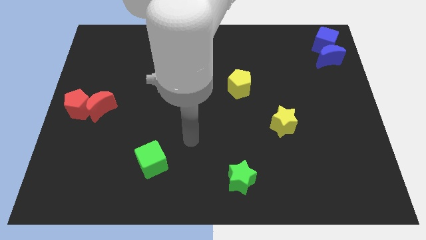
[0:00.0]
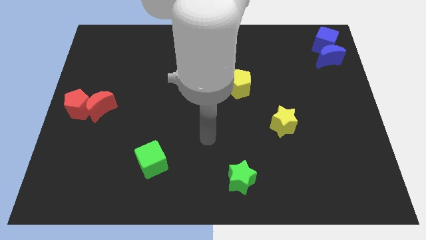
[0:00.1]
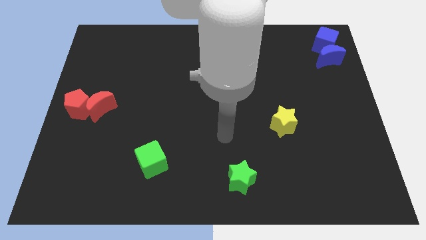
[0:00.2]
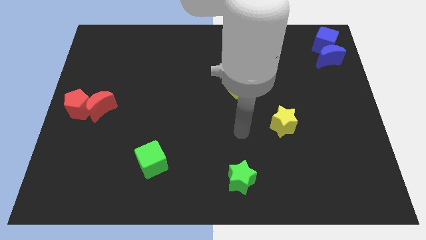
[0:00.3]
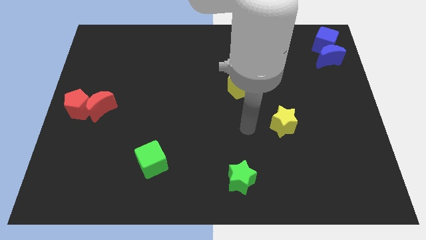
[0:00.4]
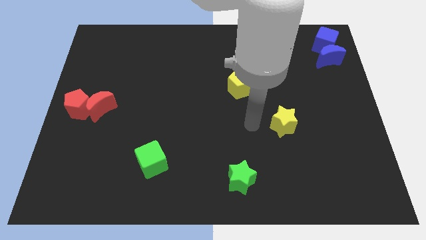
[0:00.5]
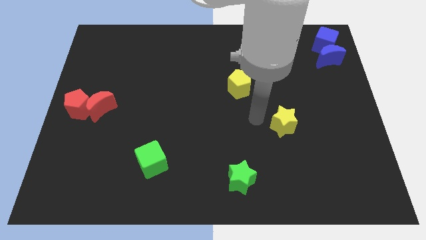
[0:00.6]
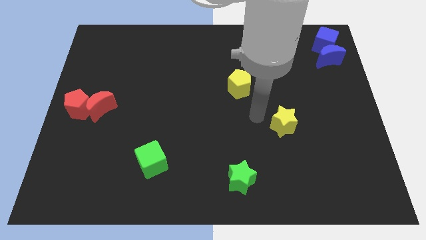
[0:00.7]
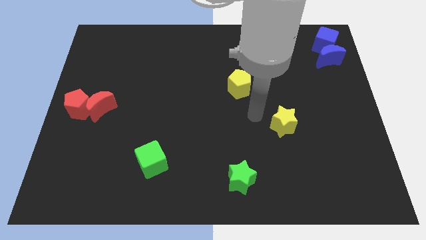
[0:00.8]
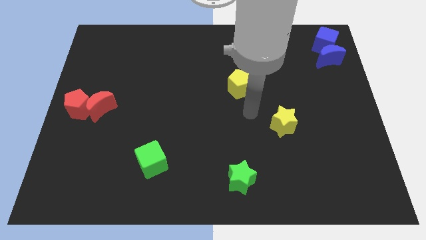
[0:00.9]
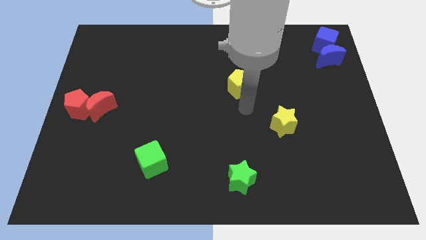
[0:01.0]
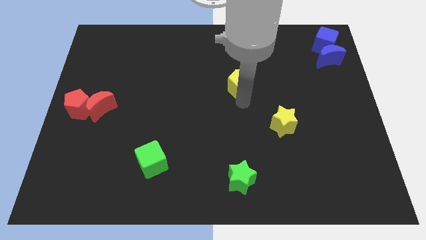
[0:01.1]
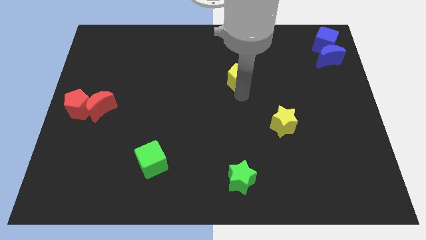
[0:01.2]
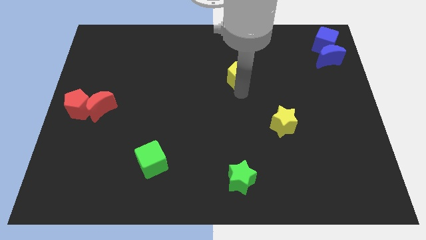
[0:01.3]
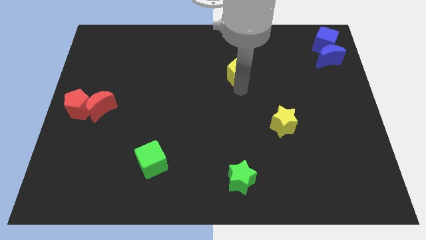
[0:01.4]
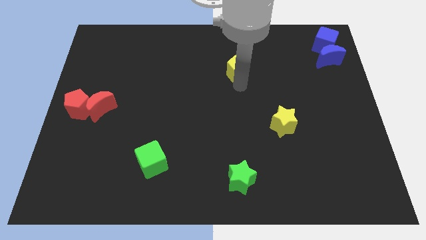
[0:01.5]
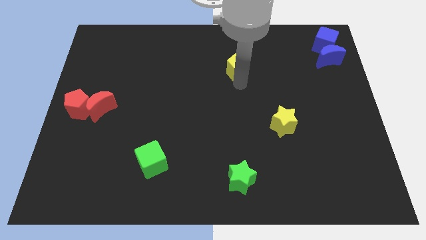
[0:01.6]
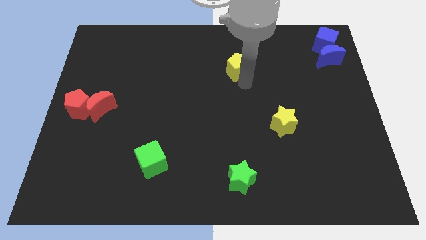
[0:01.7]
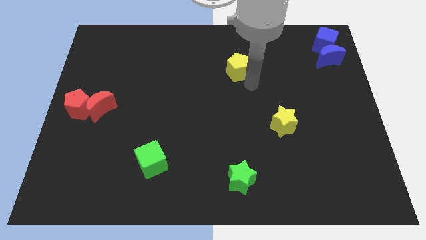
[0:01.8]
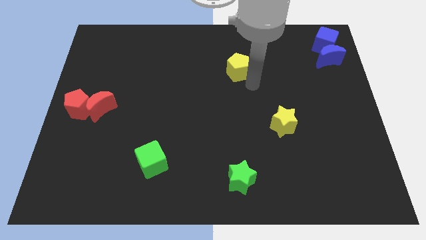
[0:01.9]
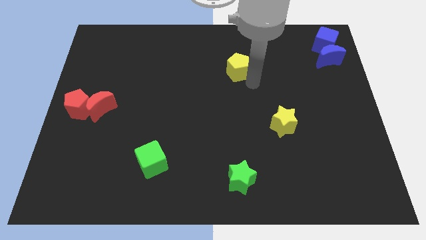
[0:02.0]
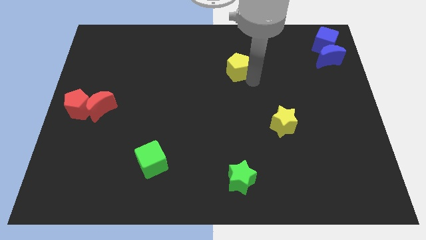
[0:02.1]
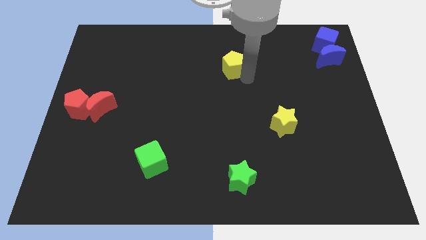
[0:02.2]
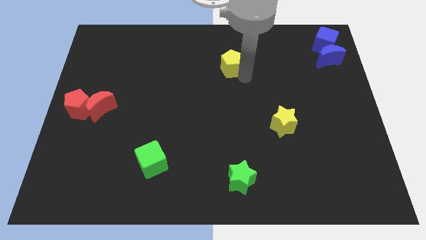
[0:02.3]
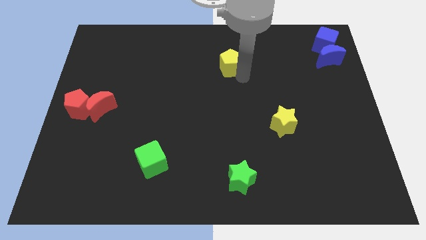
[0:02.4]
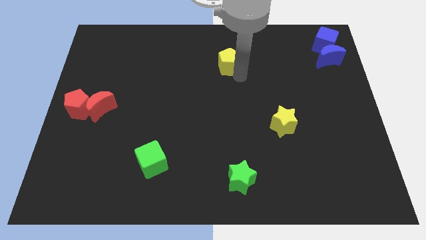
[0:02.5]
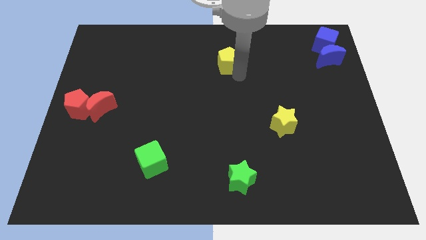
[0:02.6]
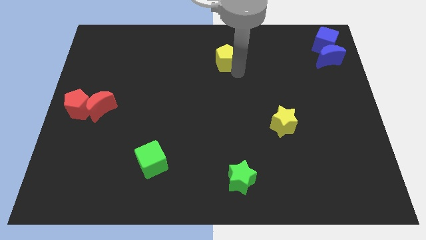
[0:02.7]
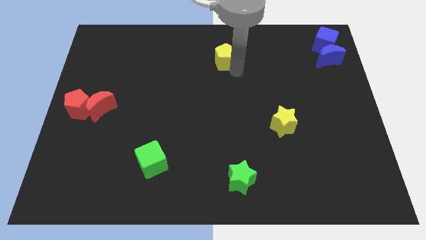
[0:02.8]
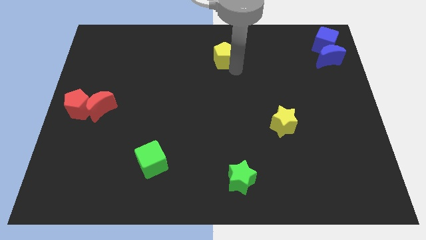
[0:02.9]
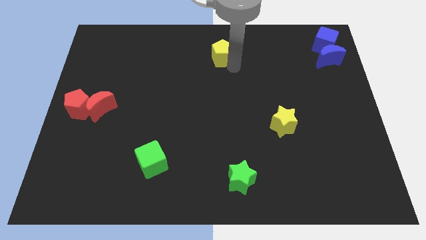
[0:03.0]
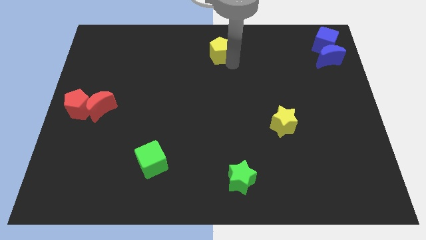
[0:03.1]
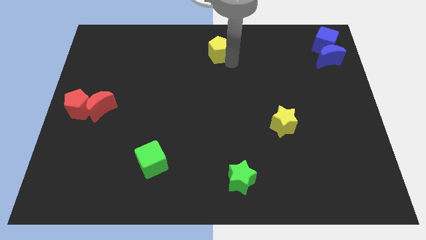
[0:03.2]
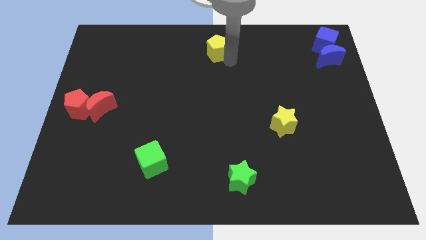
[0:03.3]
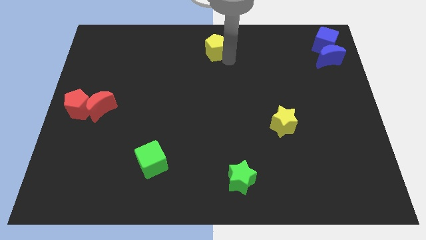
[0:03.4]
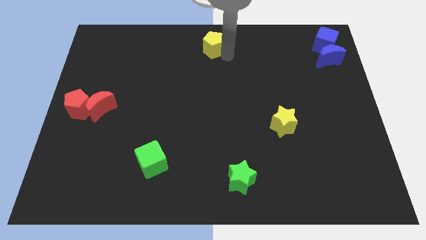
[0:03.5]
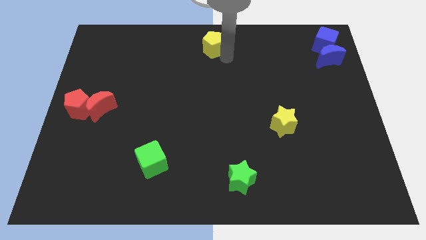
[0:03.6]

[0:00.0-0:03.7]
place yellow pantagon on the top center of the board

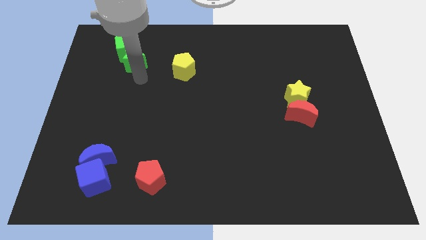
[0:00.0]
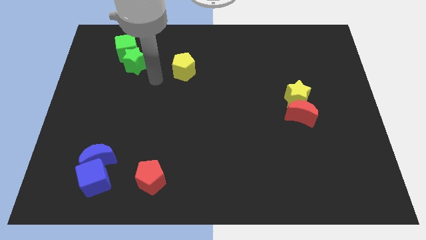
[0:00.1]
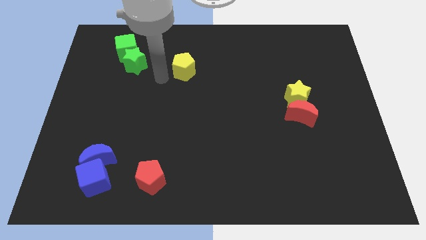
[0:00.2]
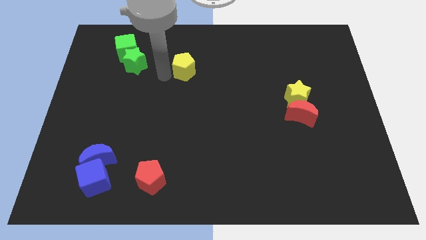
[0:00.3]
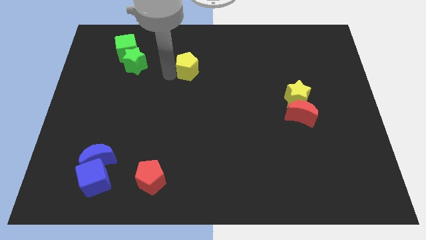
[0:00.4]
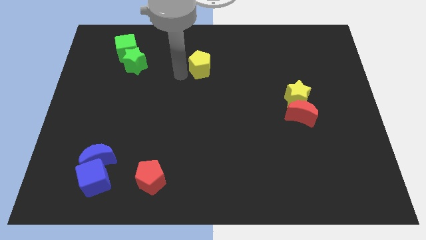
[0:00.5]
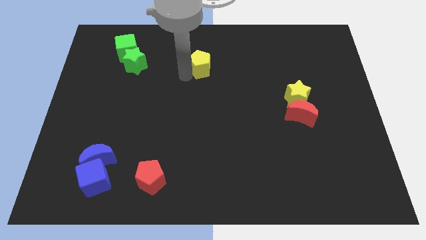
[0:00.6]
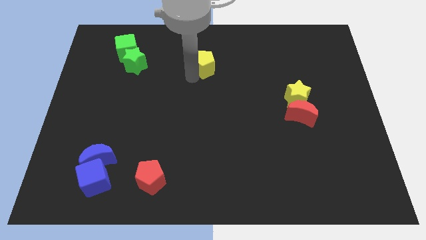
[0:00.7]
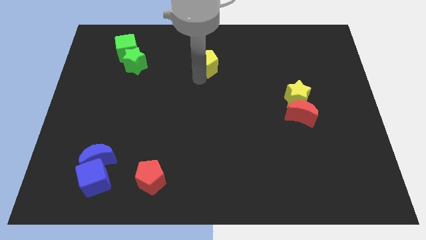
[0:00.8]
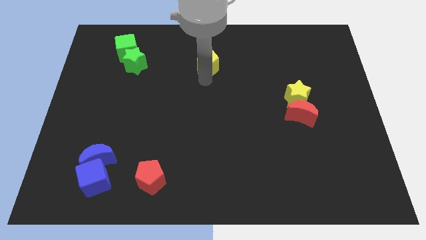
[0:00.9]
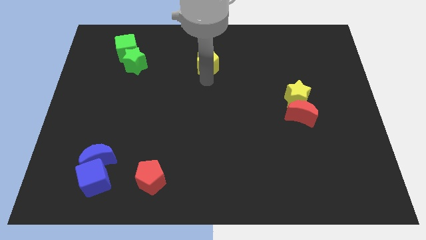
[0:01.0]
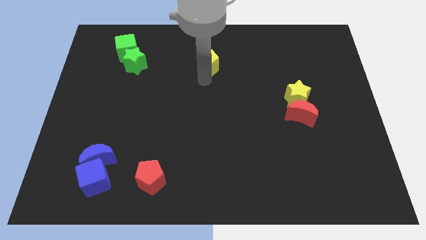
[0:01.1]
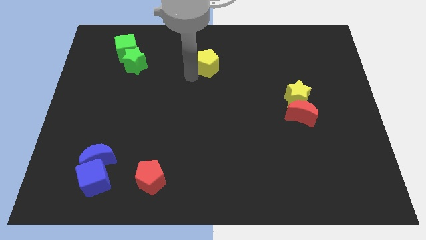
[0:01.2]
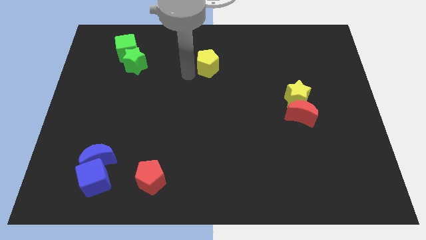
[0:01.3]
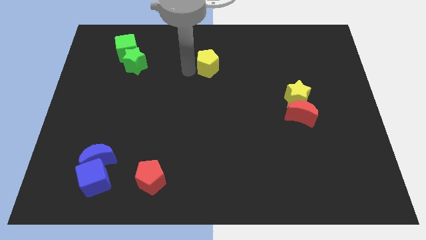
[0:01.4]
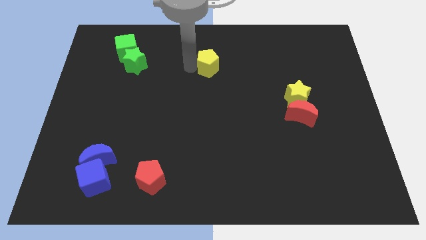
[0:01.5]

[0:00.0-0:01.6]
slide the yellow pentagon slightly to the right

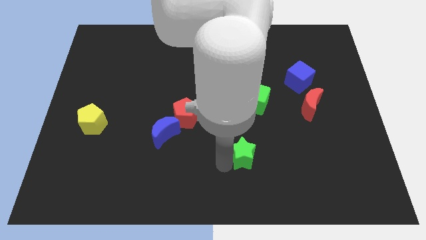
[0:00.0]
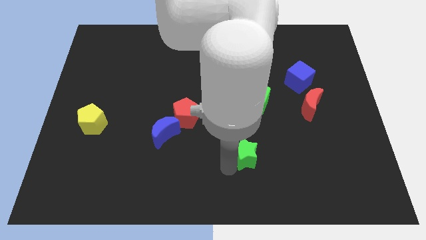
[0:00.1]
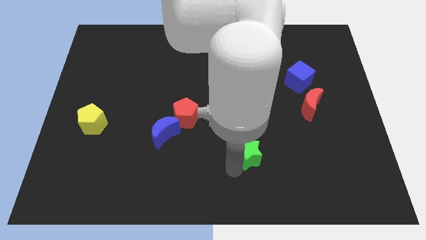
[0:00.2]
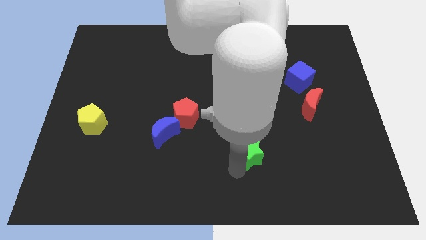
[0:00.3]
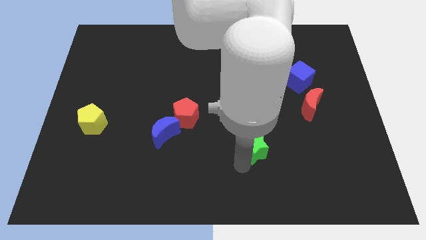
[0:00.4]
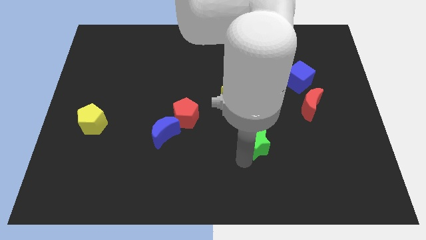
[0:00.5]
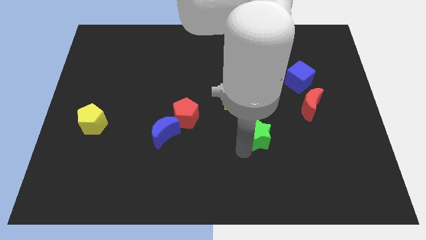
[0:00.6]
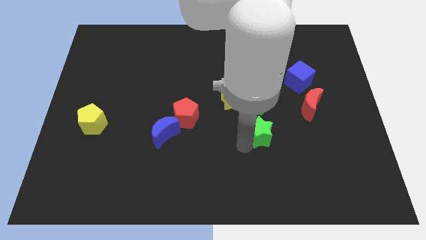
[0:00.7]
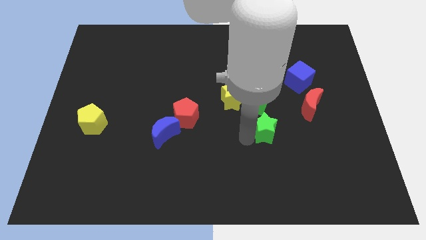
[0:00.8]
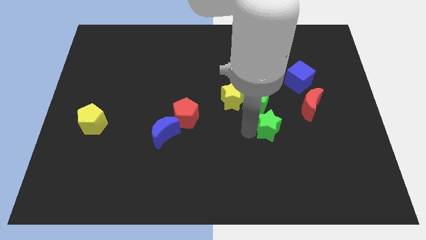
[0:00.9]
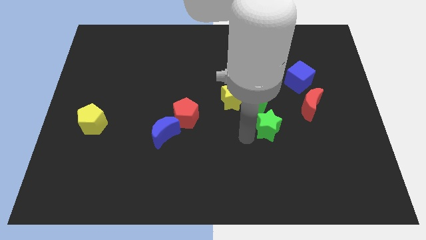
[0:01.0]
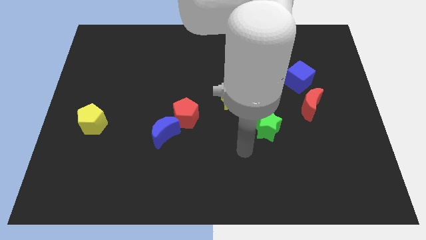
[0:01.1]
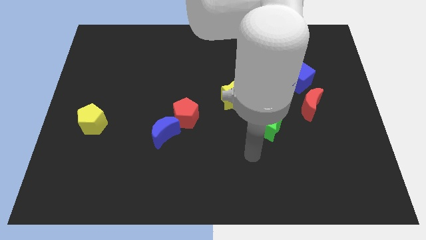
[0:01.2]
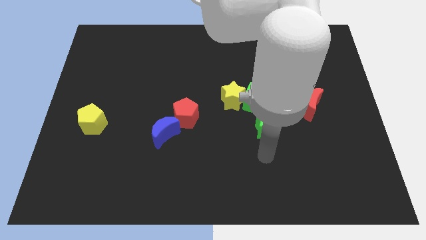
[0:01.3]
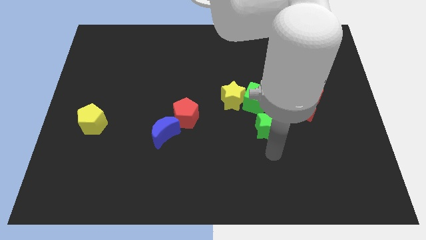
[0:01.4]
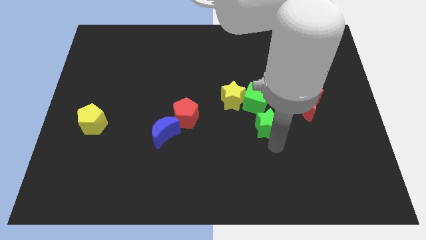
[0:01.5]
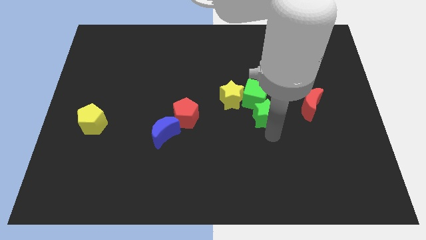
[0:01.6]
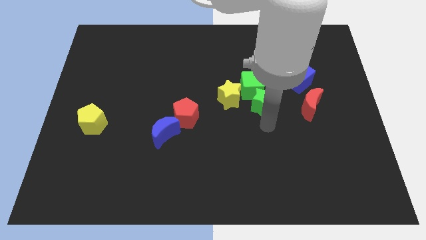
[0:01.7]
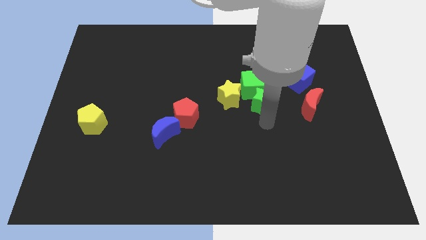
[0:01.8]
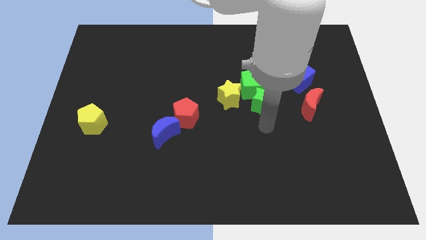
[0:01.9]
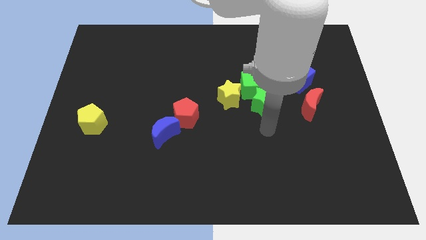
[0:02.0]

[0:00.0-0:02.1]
add green star into green cube

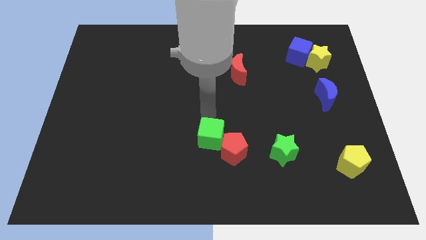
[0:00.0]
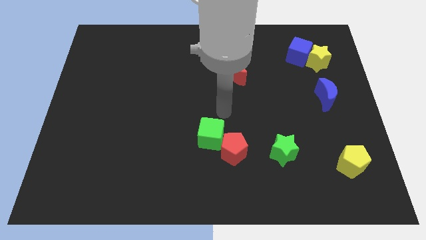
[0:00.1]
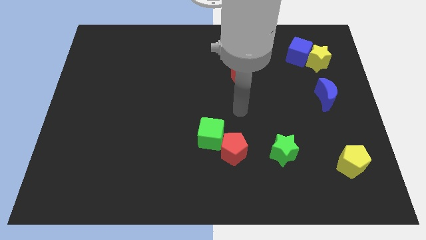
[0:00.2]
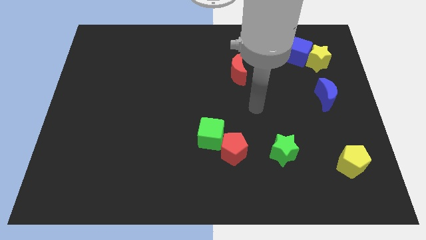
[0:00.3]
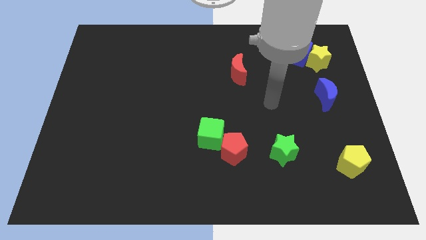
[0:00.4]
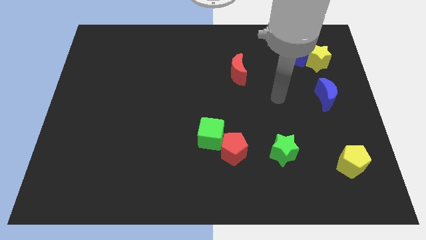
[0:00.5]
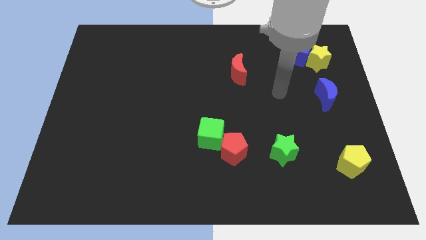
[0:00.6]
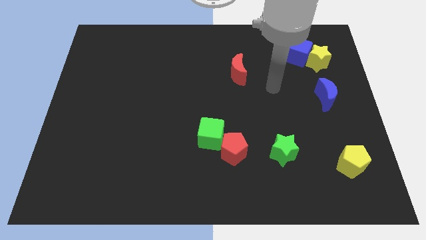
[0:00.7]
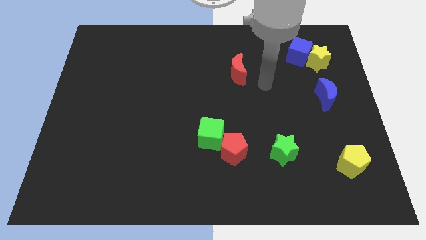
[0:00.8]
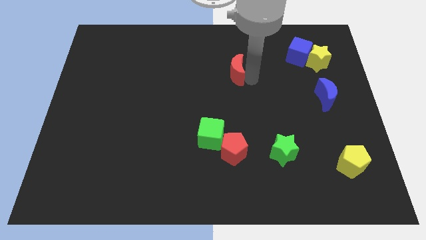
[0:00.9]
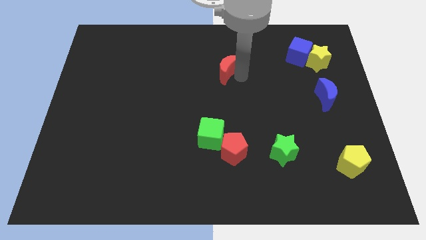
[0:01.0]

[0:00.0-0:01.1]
move the arm into the red crescent

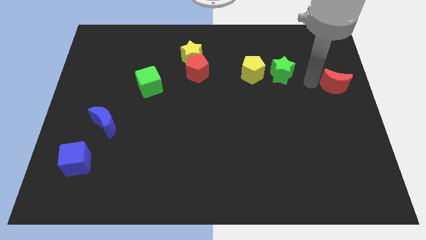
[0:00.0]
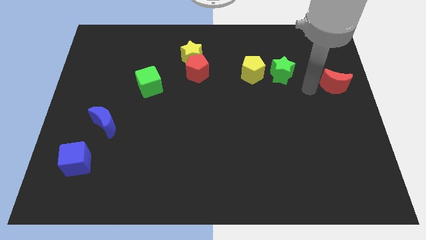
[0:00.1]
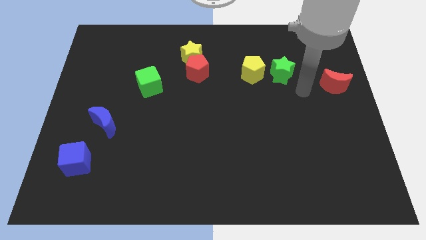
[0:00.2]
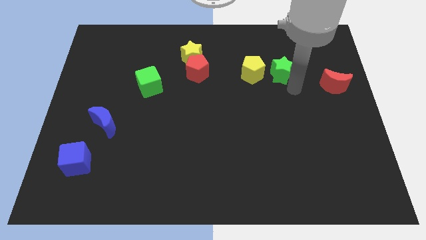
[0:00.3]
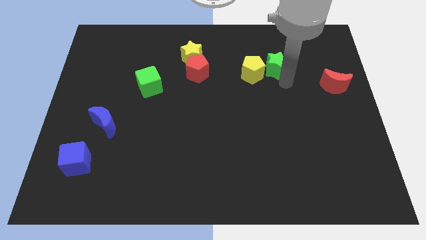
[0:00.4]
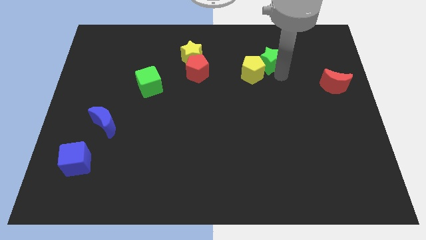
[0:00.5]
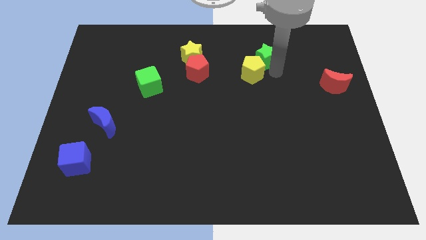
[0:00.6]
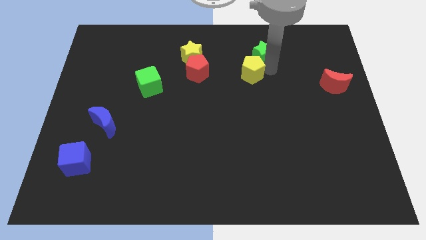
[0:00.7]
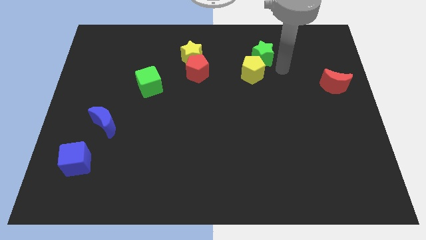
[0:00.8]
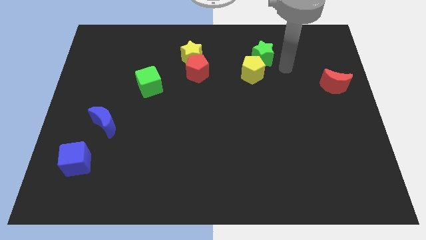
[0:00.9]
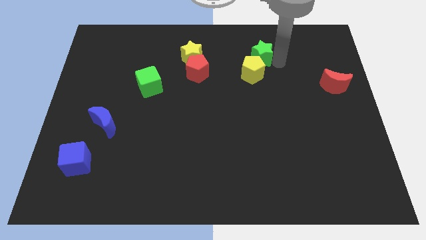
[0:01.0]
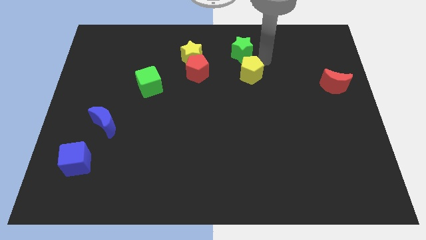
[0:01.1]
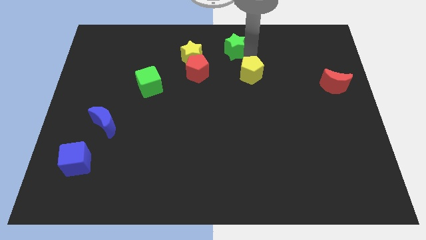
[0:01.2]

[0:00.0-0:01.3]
place the green star right to the yellow star
